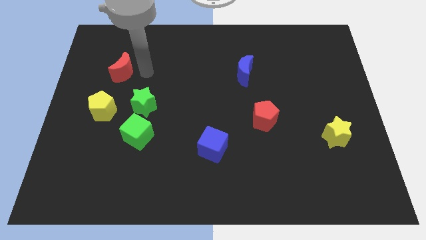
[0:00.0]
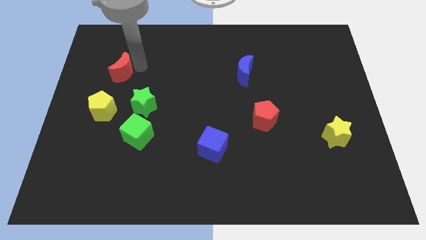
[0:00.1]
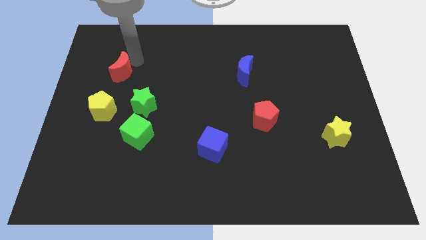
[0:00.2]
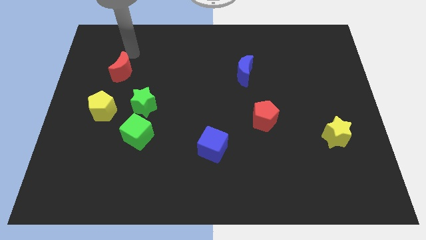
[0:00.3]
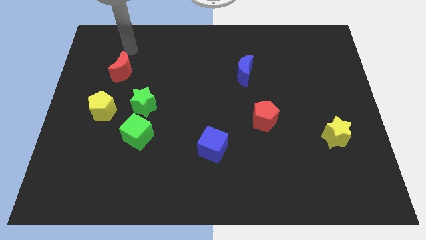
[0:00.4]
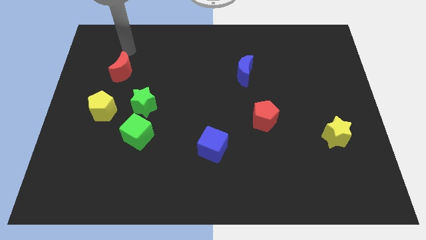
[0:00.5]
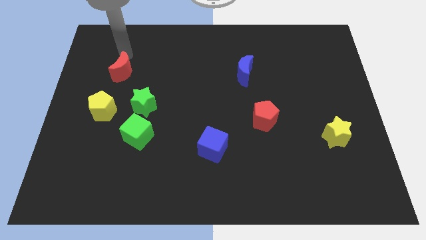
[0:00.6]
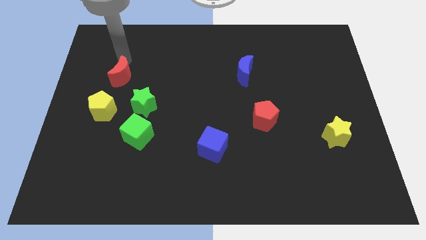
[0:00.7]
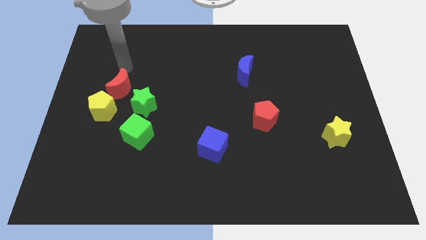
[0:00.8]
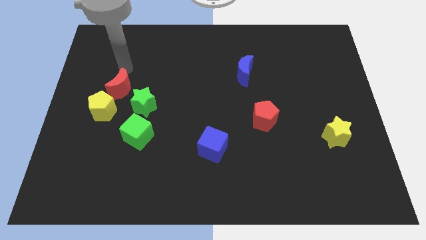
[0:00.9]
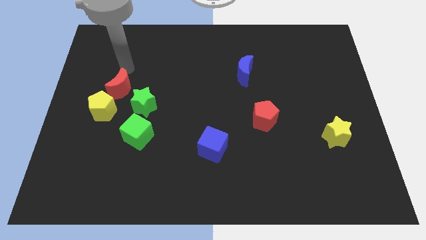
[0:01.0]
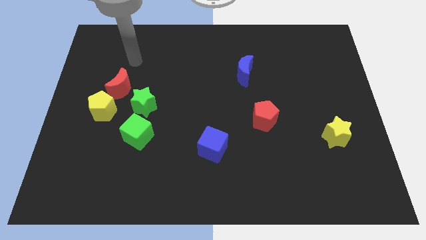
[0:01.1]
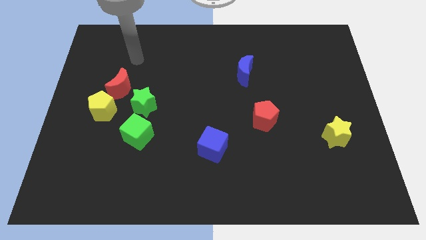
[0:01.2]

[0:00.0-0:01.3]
move the red crescent to the top side of the yellow pentagon

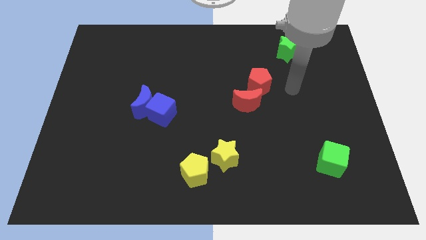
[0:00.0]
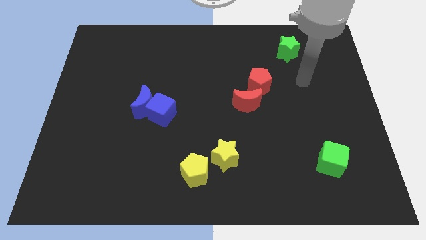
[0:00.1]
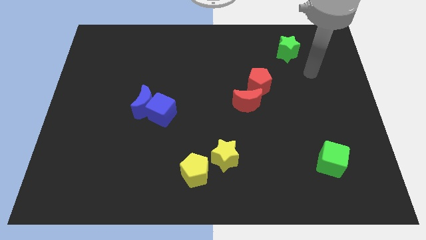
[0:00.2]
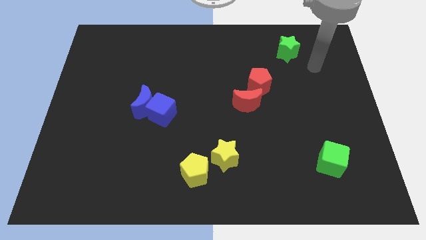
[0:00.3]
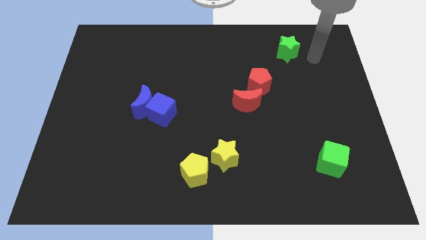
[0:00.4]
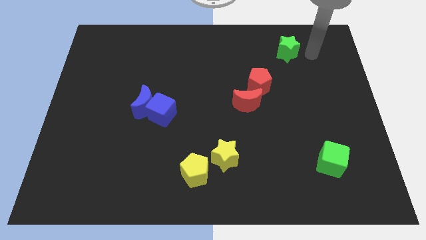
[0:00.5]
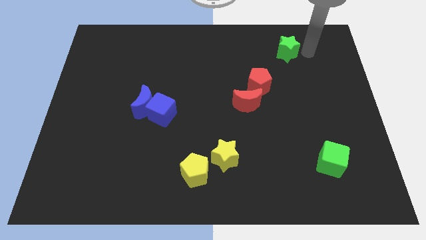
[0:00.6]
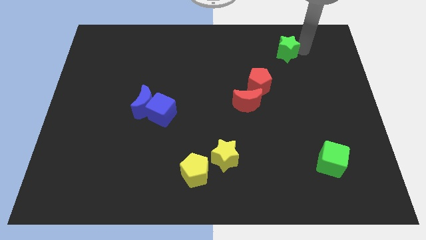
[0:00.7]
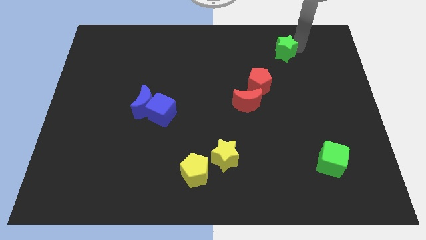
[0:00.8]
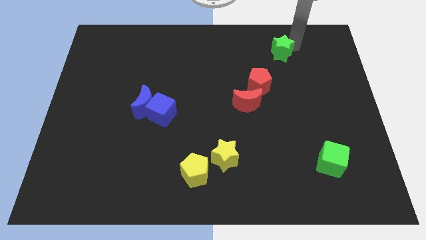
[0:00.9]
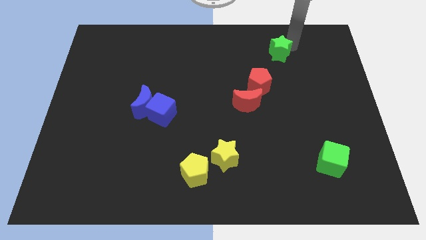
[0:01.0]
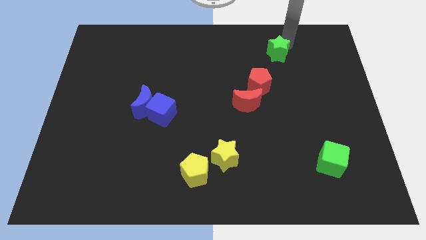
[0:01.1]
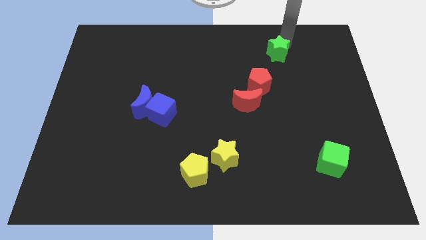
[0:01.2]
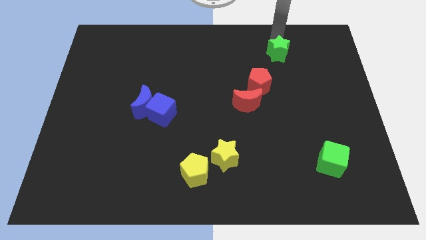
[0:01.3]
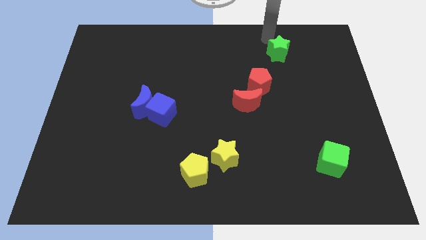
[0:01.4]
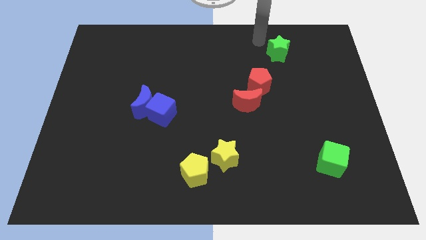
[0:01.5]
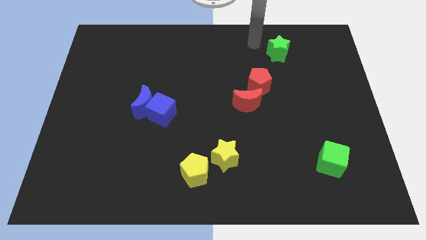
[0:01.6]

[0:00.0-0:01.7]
push the green star diagonally on the top right side of the red pentagon

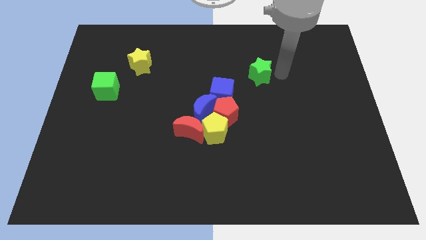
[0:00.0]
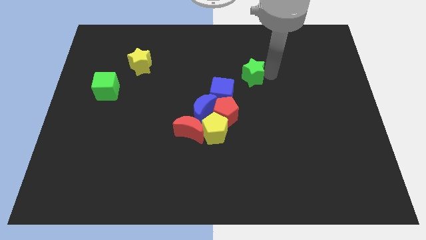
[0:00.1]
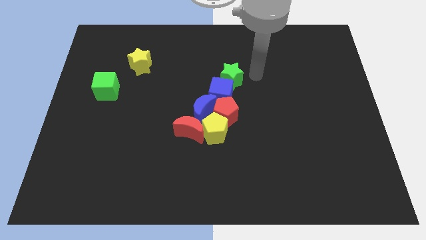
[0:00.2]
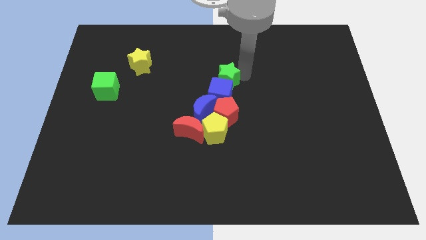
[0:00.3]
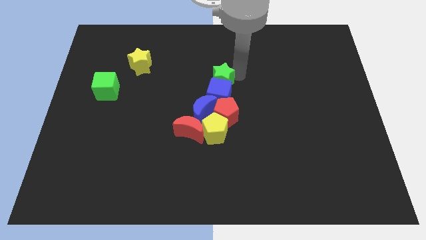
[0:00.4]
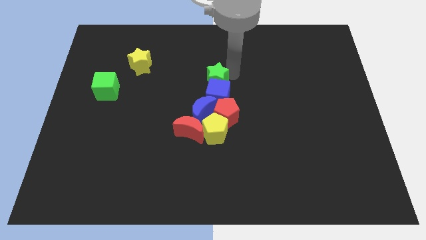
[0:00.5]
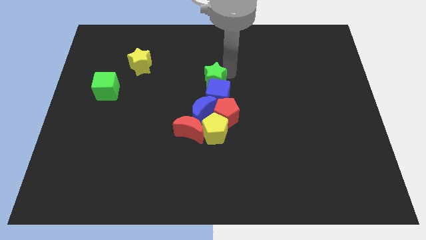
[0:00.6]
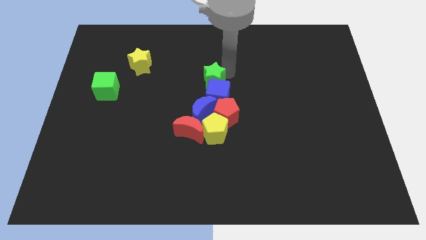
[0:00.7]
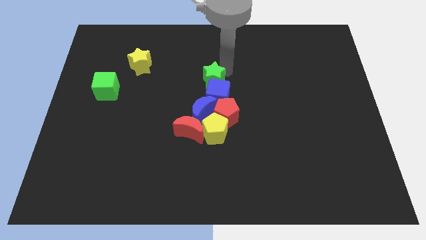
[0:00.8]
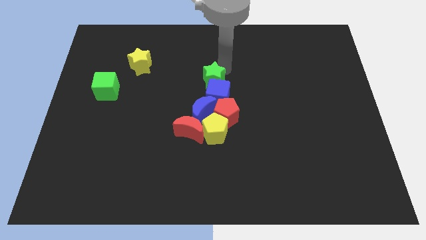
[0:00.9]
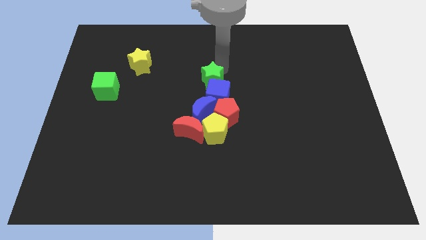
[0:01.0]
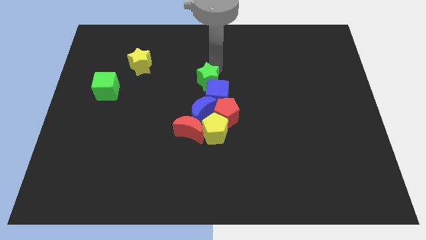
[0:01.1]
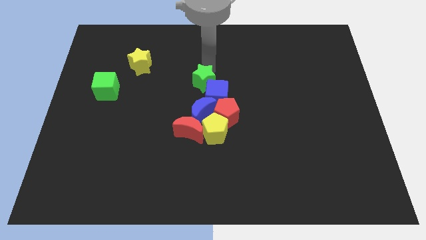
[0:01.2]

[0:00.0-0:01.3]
push the green star into the blue cube

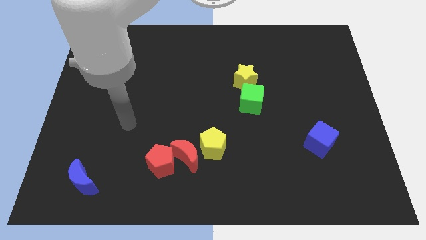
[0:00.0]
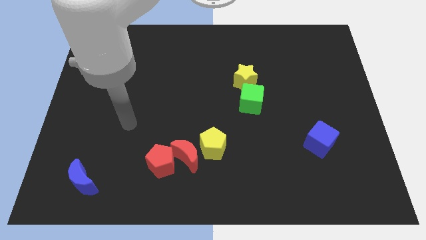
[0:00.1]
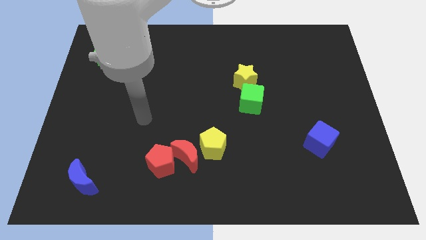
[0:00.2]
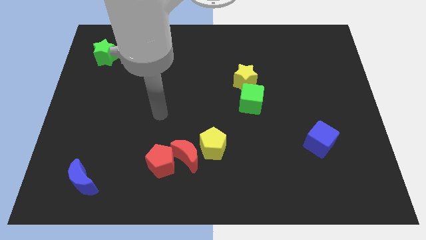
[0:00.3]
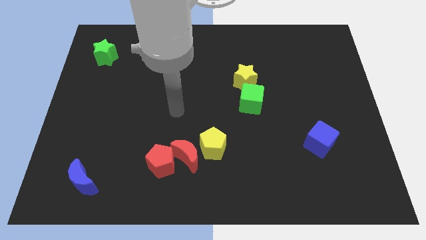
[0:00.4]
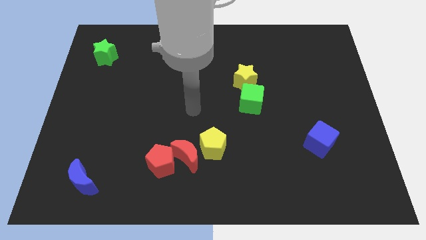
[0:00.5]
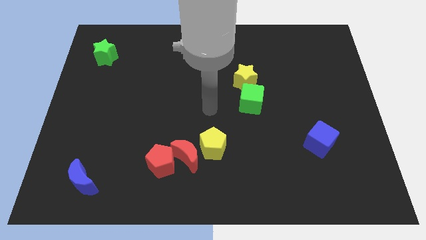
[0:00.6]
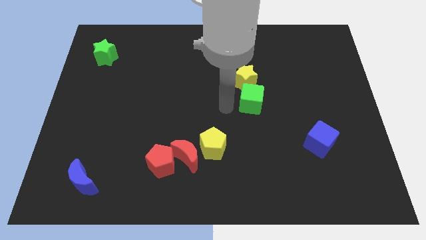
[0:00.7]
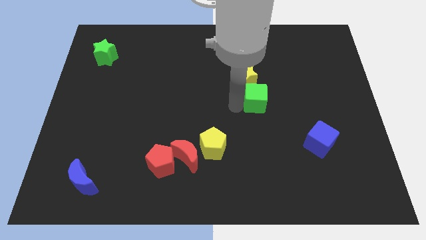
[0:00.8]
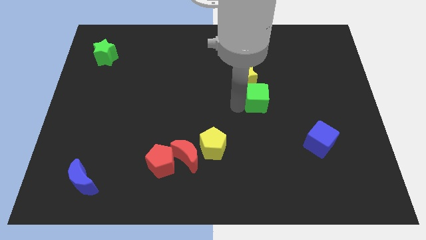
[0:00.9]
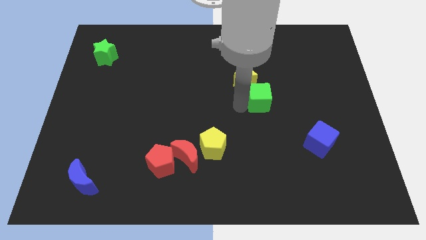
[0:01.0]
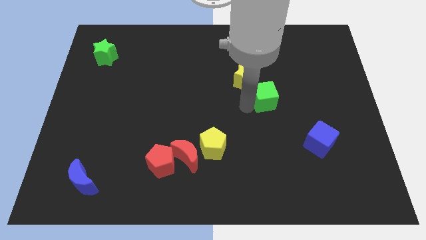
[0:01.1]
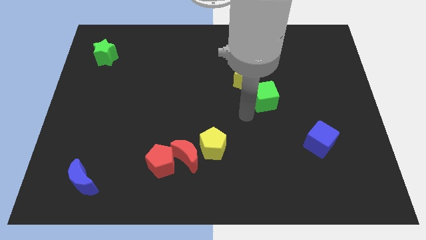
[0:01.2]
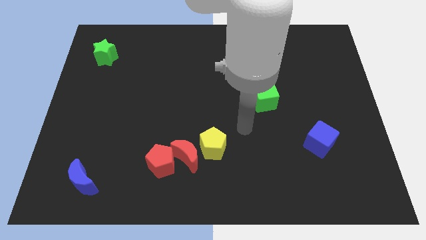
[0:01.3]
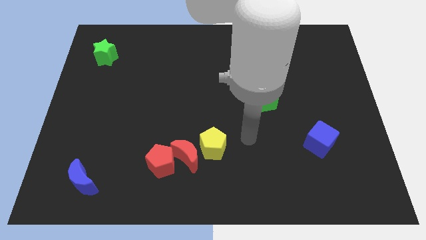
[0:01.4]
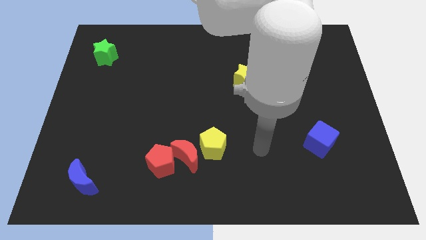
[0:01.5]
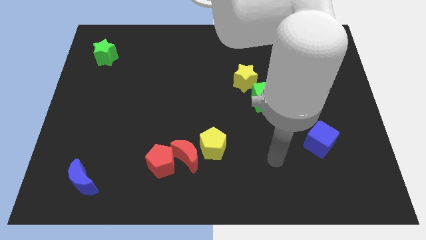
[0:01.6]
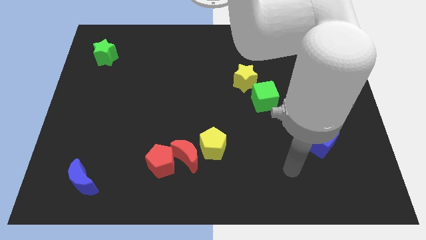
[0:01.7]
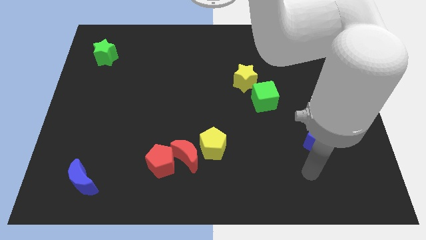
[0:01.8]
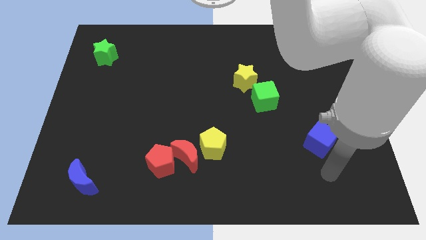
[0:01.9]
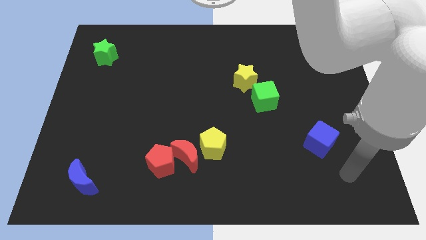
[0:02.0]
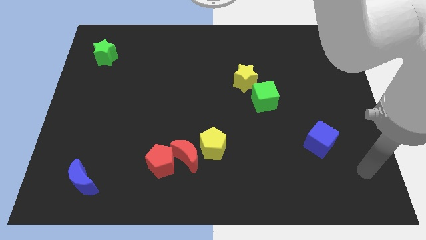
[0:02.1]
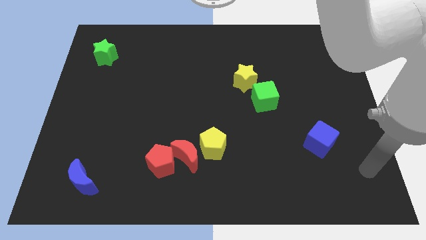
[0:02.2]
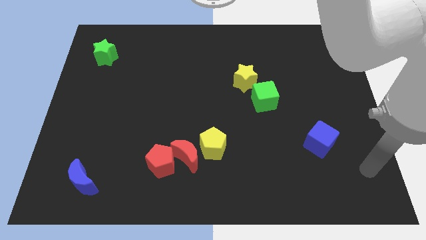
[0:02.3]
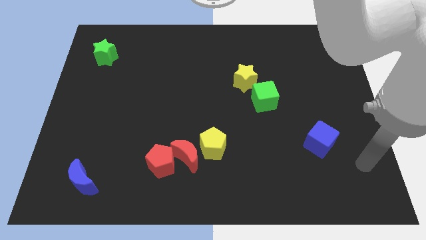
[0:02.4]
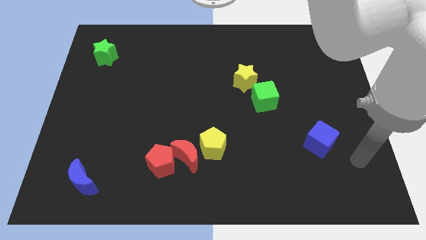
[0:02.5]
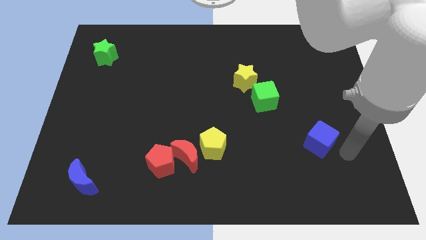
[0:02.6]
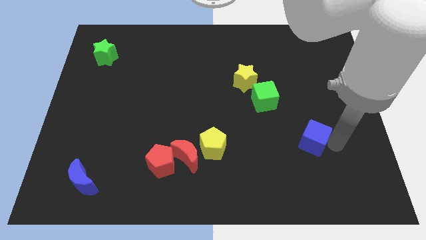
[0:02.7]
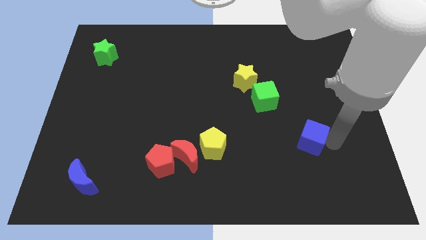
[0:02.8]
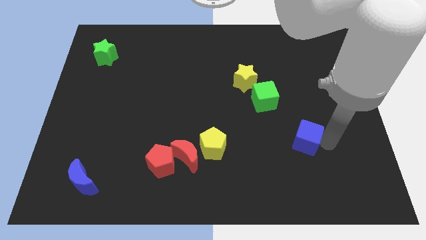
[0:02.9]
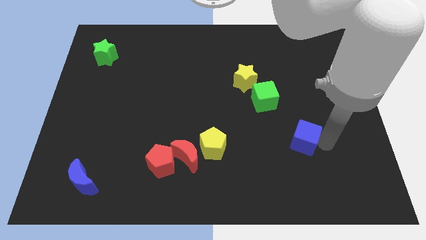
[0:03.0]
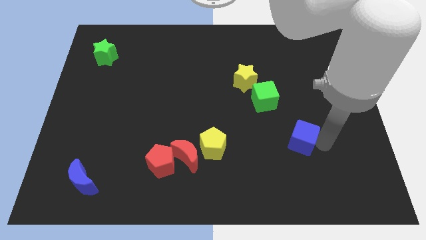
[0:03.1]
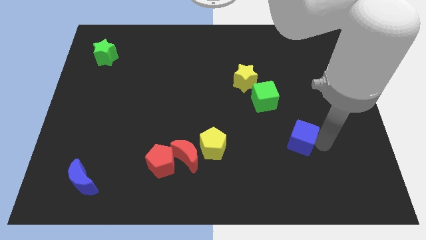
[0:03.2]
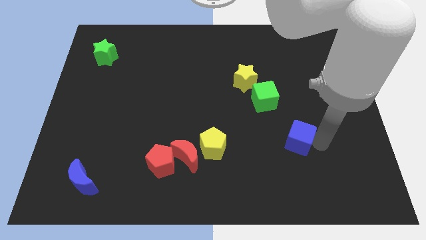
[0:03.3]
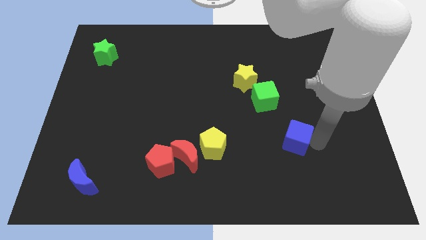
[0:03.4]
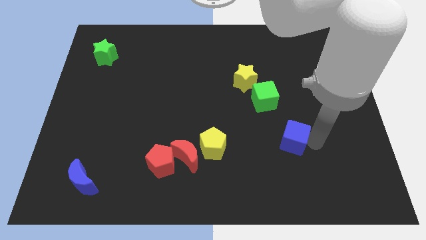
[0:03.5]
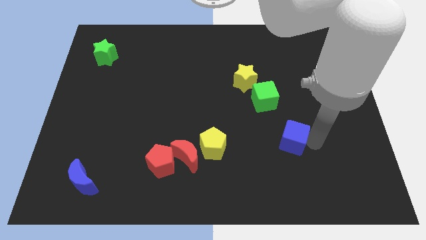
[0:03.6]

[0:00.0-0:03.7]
move your arm to the blue cube

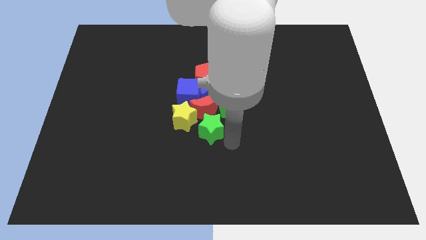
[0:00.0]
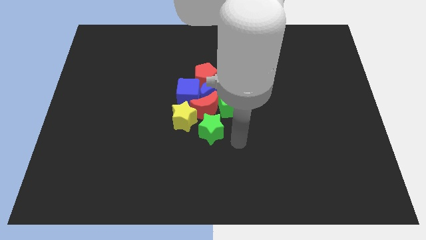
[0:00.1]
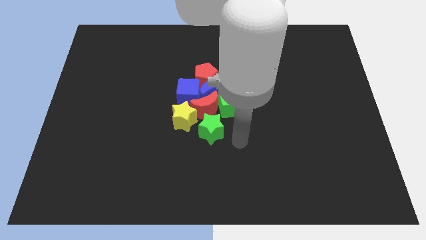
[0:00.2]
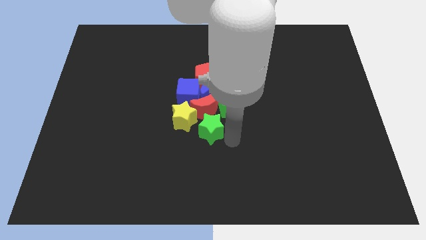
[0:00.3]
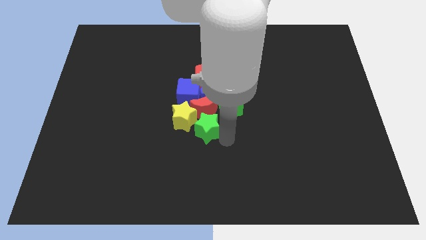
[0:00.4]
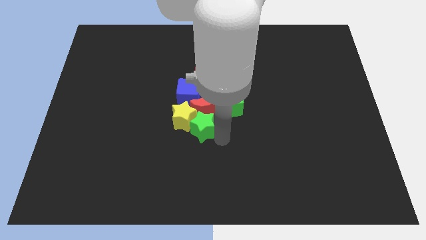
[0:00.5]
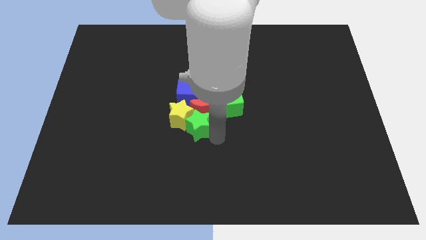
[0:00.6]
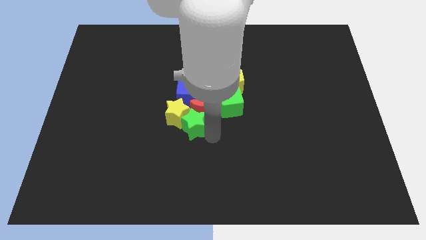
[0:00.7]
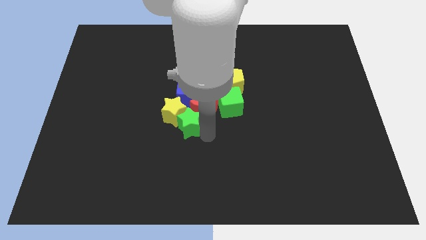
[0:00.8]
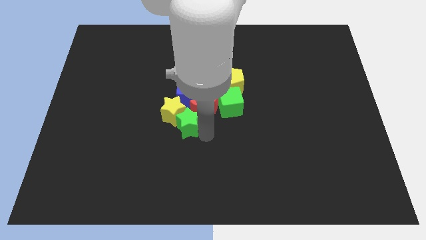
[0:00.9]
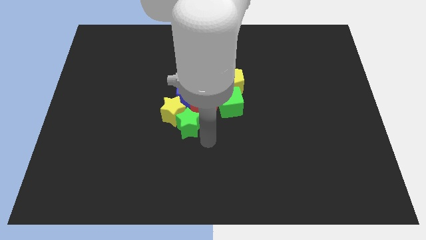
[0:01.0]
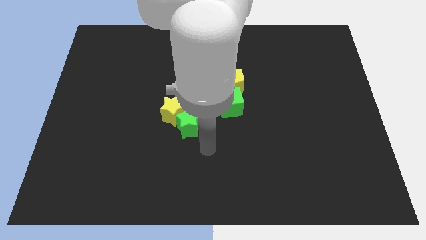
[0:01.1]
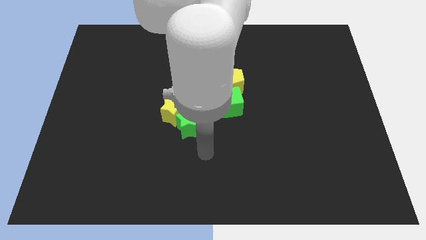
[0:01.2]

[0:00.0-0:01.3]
push the green star into the yellow star
